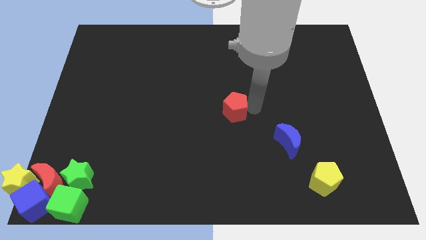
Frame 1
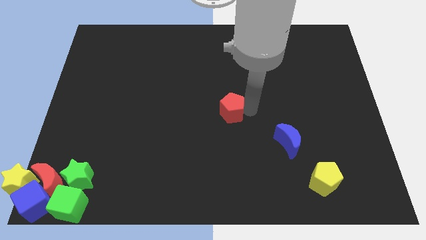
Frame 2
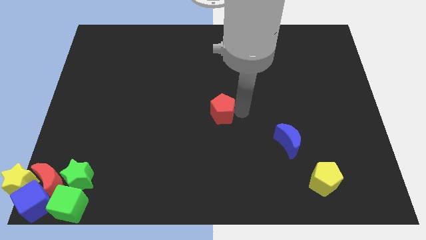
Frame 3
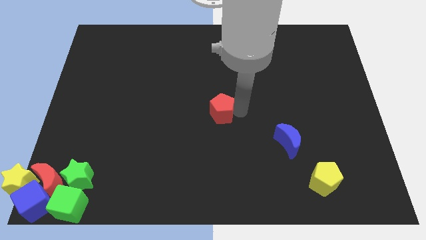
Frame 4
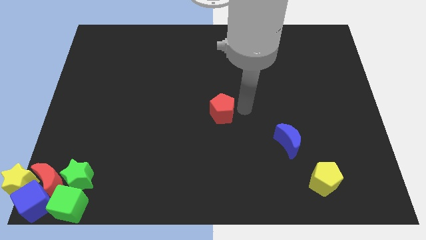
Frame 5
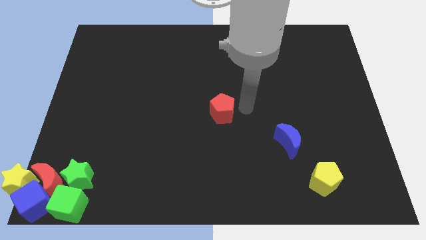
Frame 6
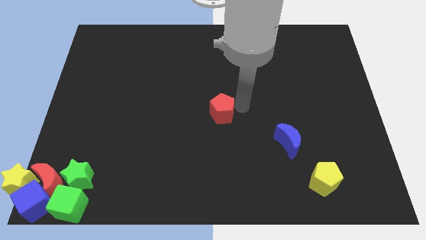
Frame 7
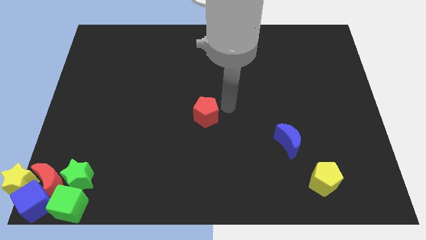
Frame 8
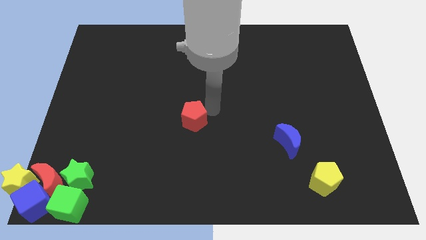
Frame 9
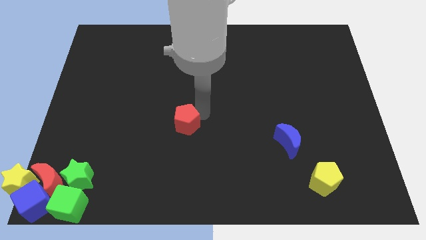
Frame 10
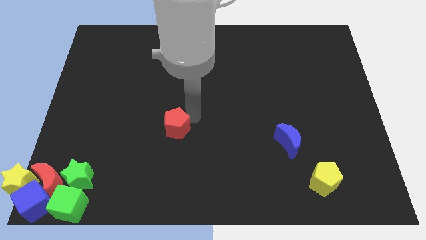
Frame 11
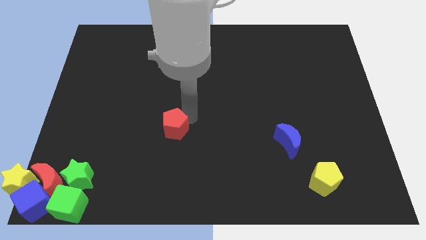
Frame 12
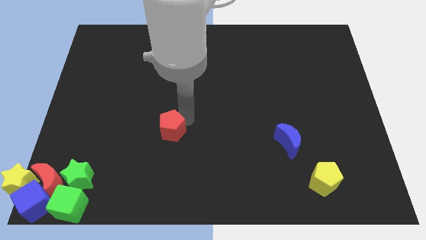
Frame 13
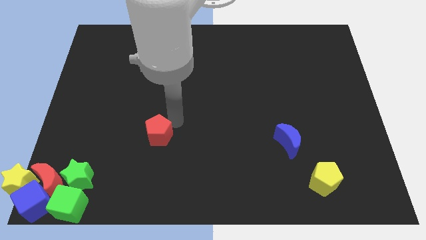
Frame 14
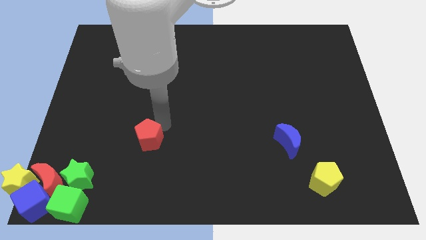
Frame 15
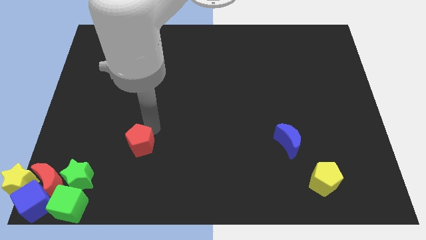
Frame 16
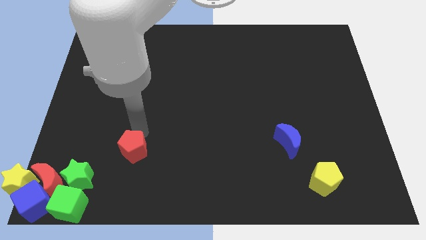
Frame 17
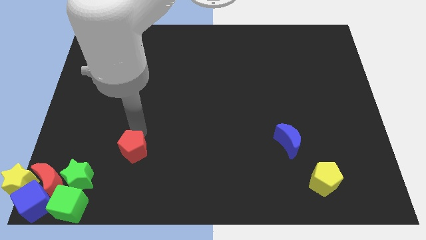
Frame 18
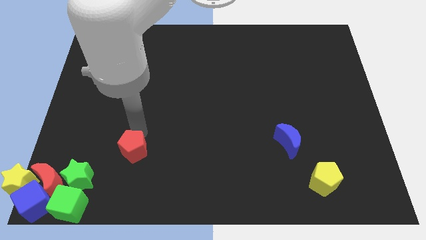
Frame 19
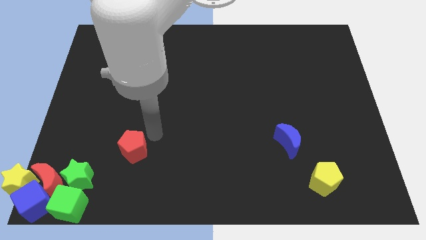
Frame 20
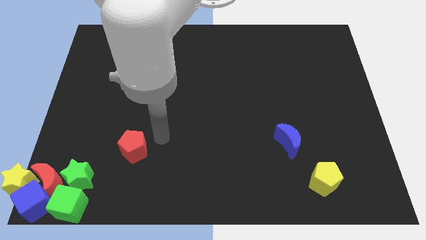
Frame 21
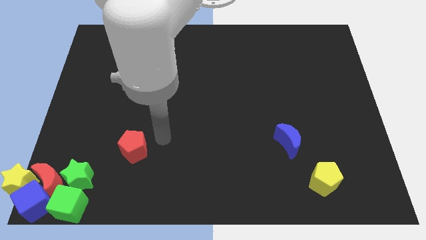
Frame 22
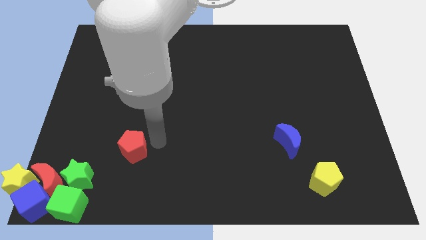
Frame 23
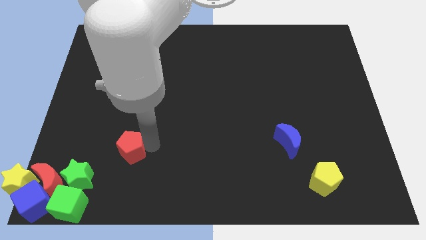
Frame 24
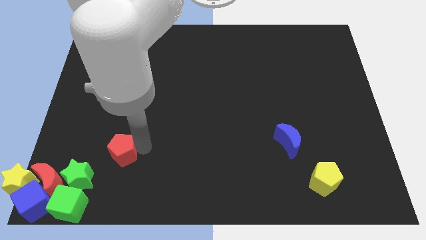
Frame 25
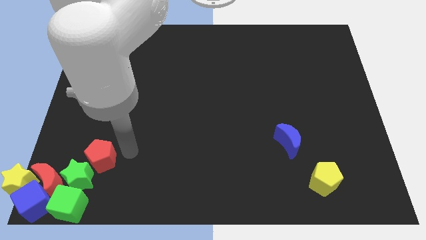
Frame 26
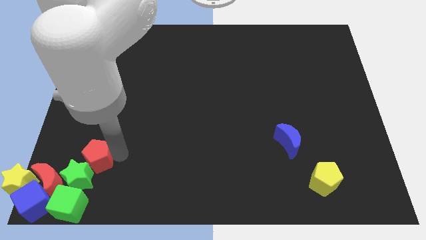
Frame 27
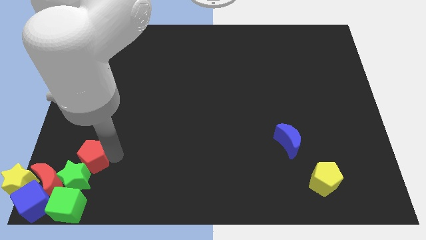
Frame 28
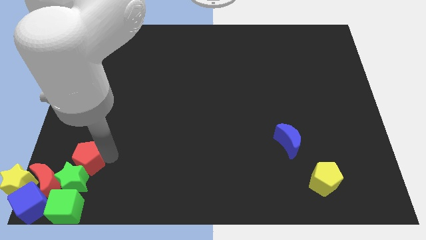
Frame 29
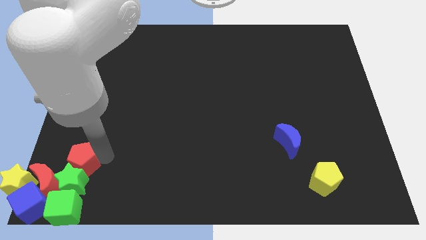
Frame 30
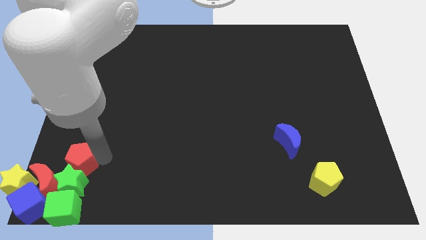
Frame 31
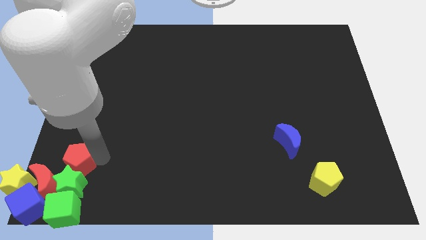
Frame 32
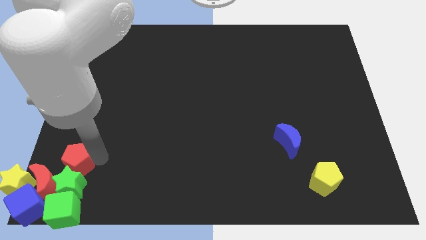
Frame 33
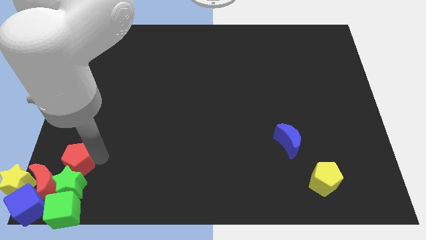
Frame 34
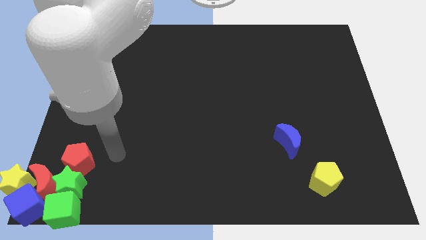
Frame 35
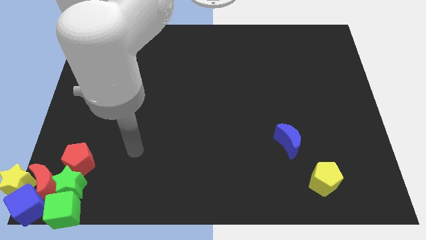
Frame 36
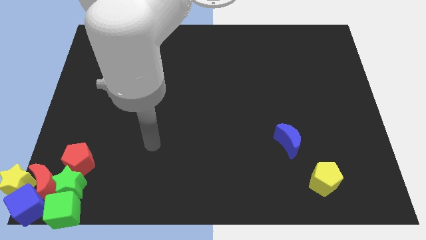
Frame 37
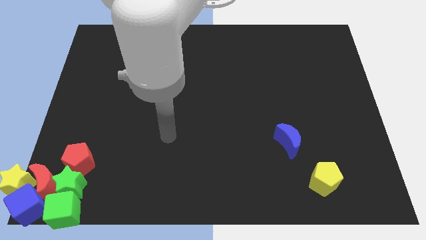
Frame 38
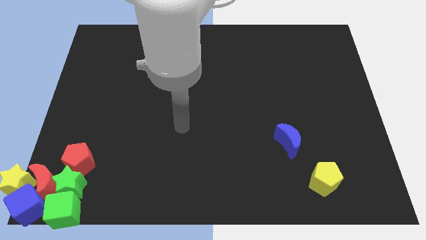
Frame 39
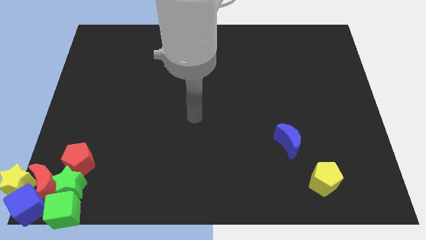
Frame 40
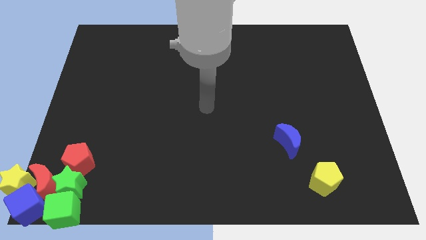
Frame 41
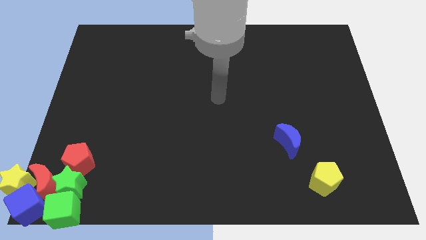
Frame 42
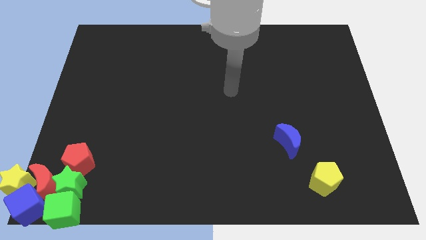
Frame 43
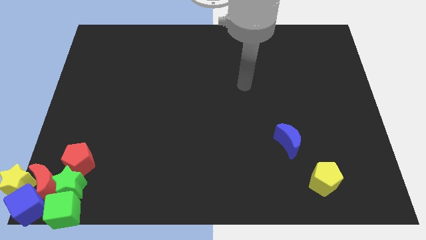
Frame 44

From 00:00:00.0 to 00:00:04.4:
place the red pentagon above the green star

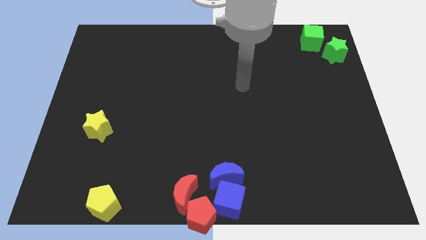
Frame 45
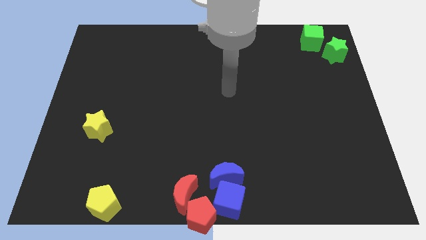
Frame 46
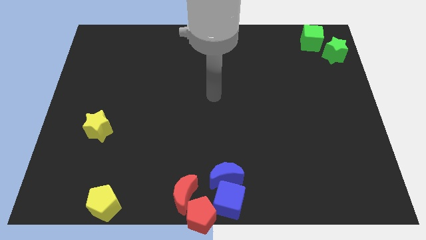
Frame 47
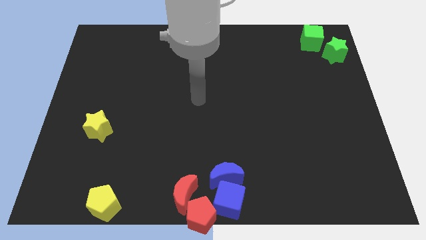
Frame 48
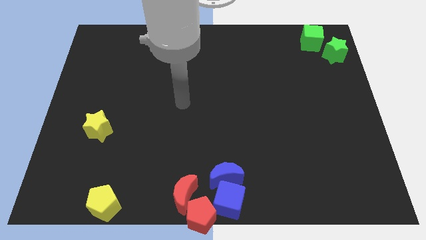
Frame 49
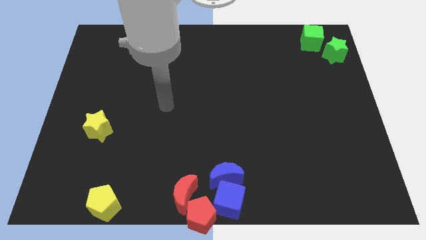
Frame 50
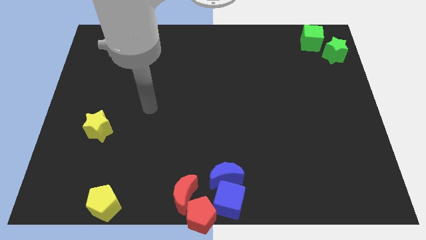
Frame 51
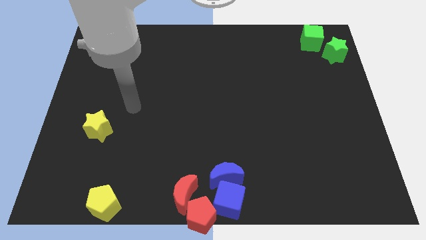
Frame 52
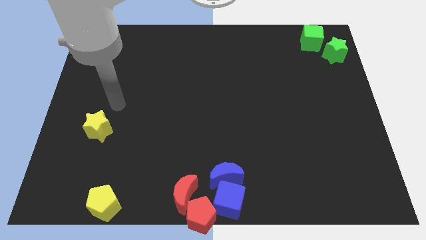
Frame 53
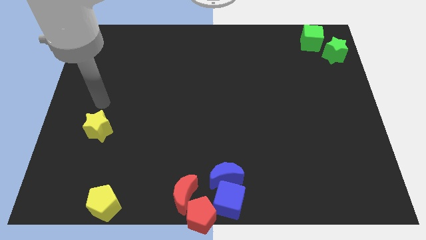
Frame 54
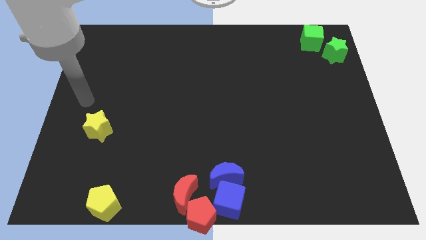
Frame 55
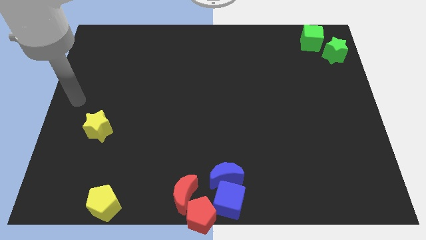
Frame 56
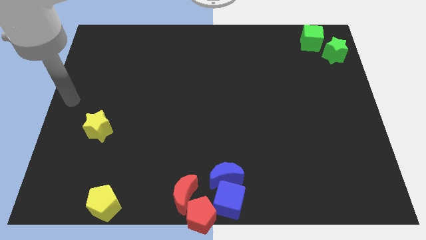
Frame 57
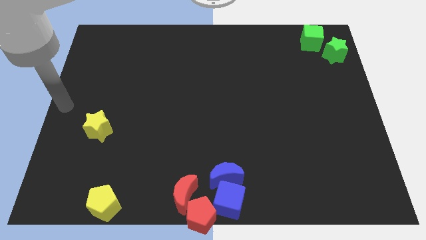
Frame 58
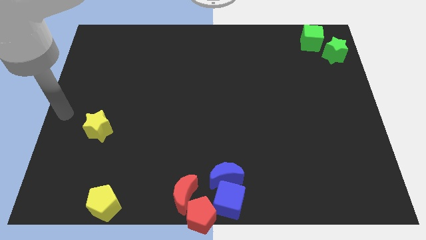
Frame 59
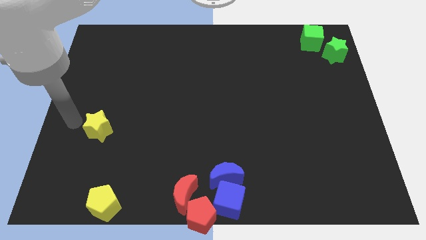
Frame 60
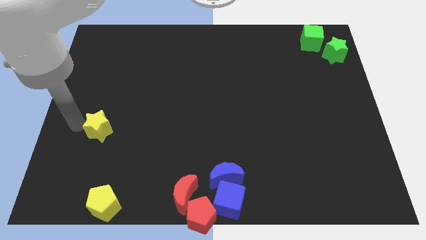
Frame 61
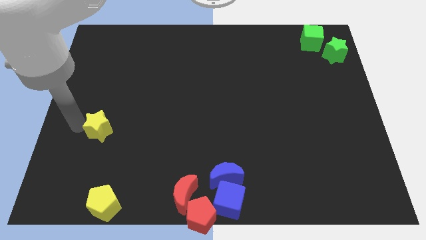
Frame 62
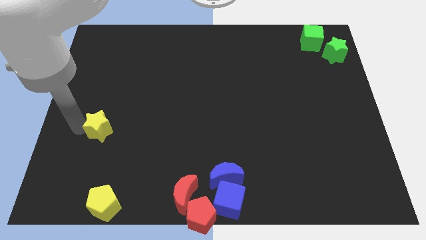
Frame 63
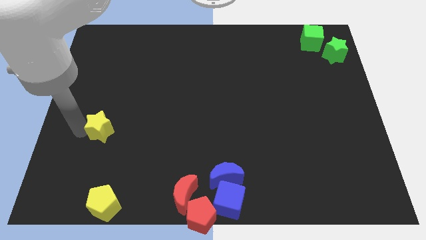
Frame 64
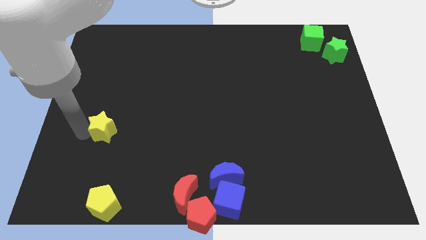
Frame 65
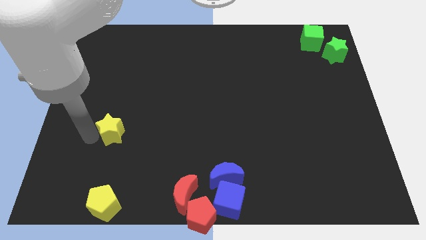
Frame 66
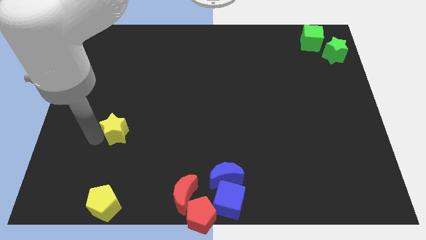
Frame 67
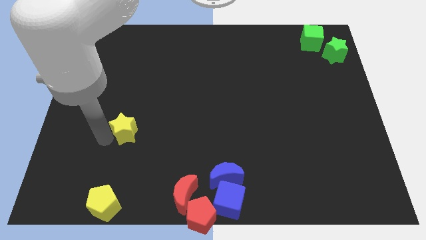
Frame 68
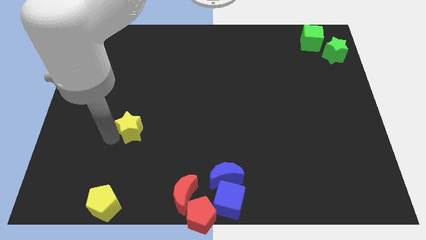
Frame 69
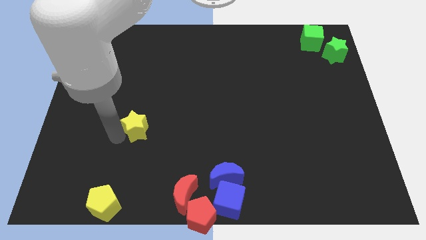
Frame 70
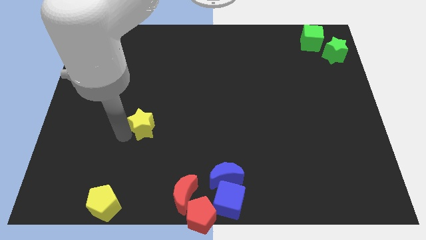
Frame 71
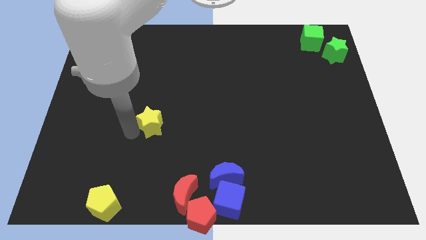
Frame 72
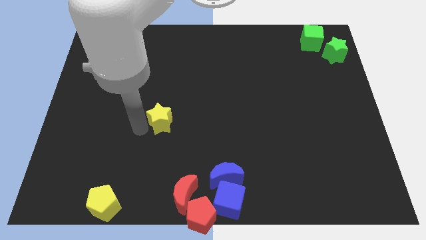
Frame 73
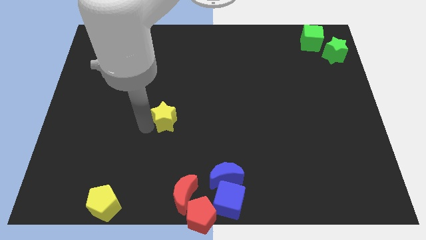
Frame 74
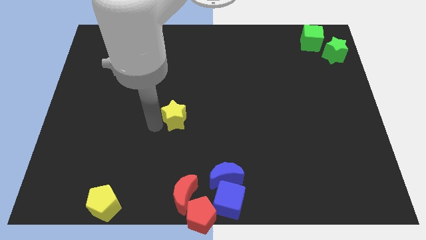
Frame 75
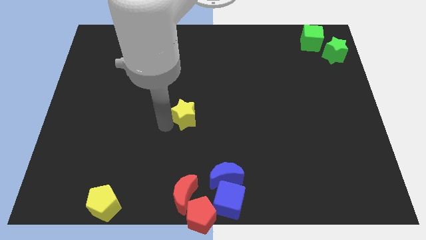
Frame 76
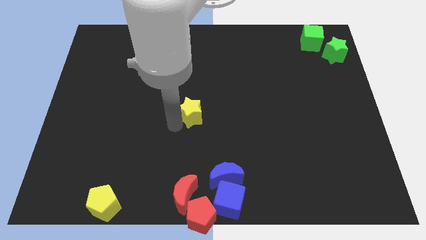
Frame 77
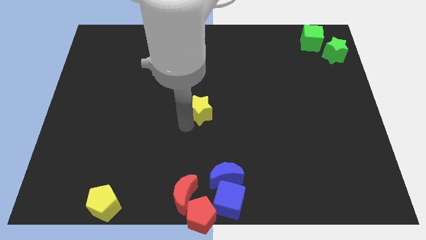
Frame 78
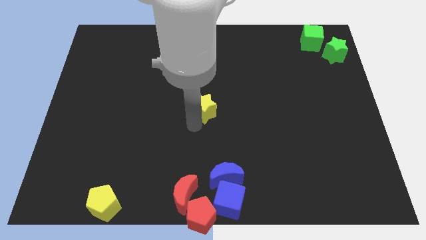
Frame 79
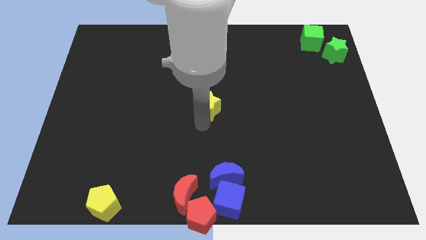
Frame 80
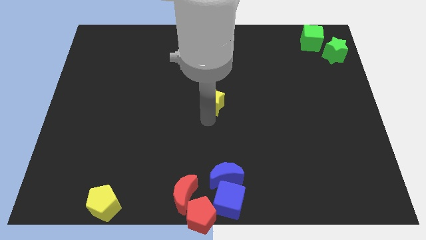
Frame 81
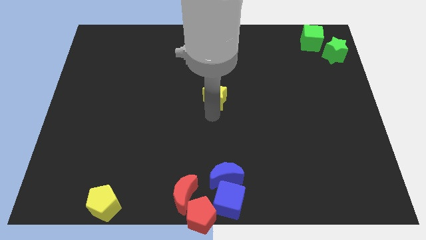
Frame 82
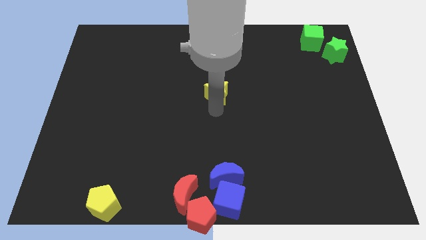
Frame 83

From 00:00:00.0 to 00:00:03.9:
place the yellow star at the center of the board

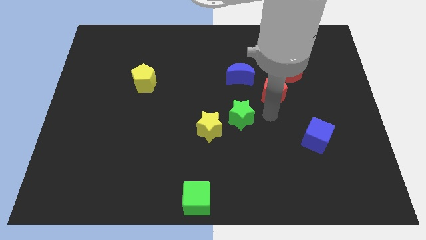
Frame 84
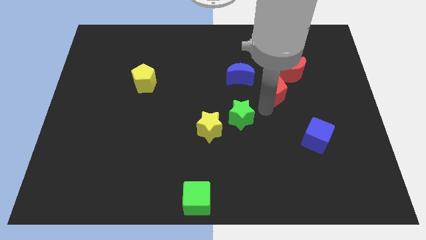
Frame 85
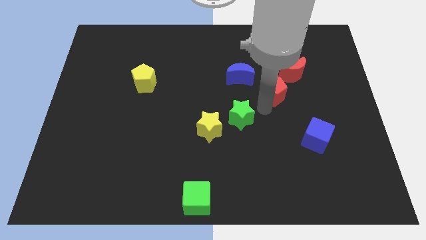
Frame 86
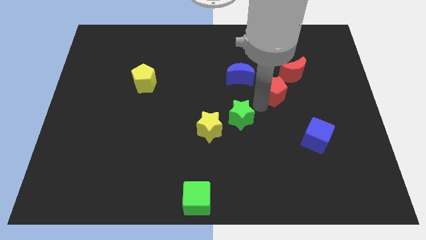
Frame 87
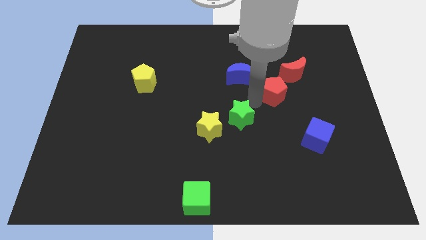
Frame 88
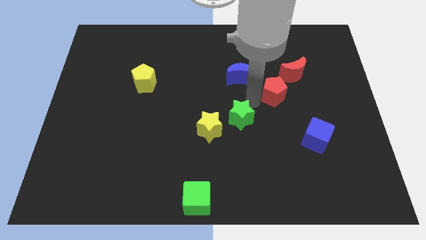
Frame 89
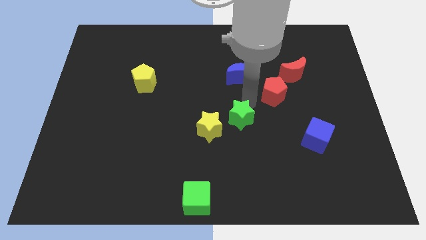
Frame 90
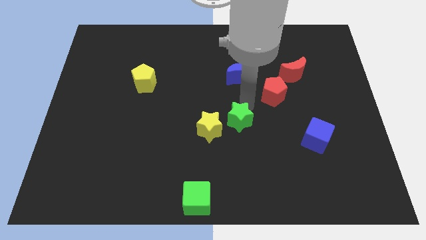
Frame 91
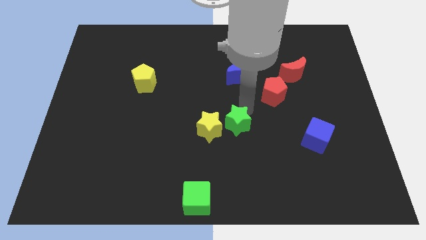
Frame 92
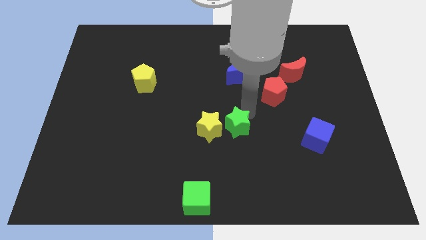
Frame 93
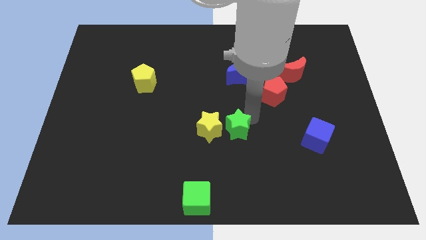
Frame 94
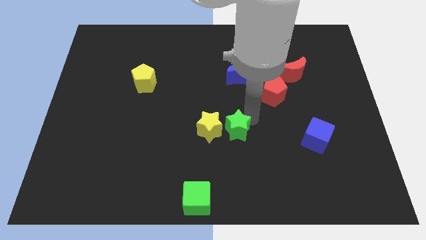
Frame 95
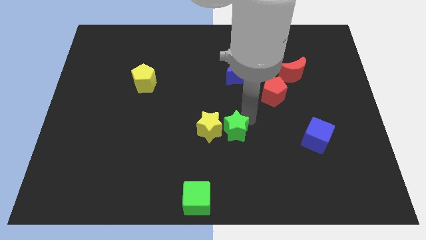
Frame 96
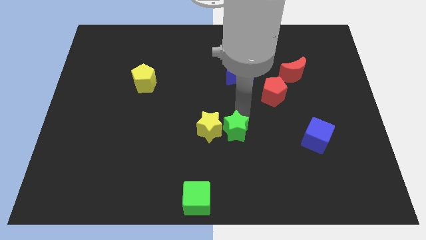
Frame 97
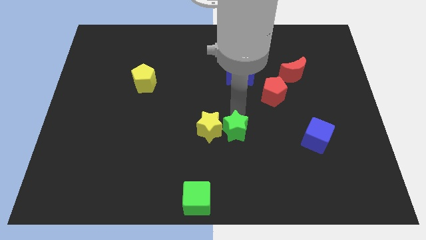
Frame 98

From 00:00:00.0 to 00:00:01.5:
place the green star to the right of yellow star
